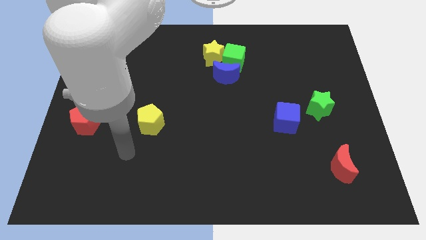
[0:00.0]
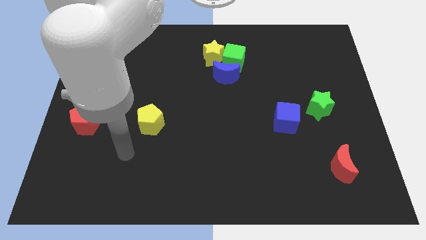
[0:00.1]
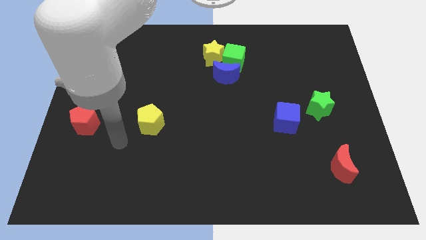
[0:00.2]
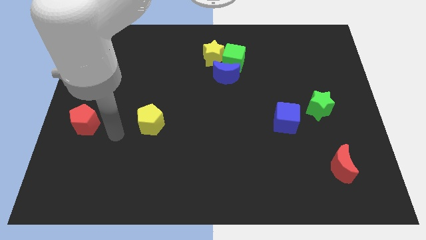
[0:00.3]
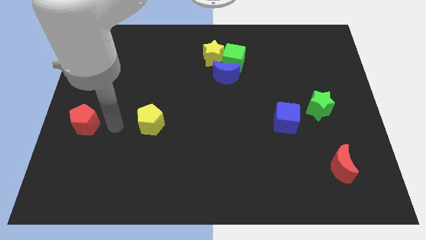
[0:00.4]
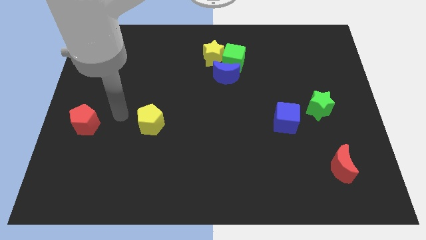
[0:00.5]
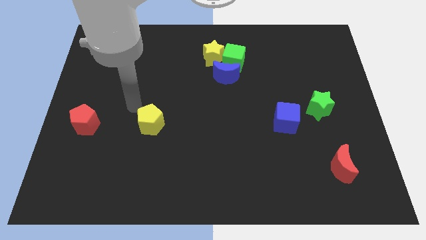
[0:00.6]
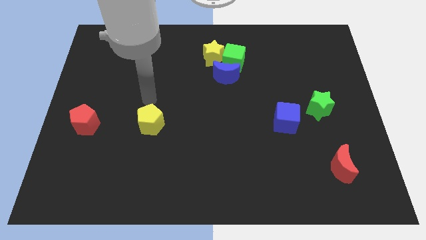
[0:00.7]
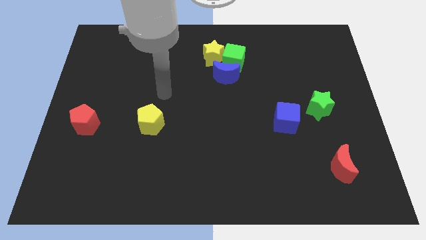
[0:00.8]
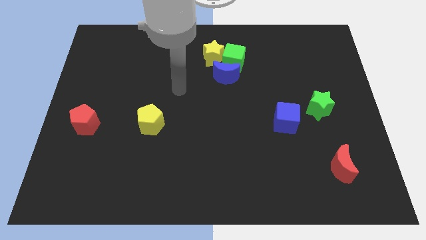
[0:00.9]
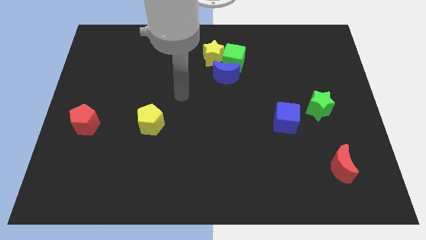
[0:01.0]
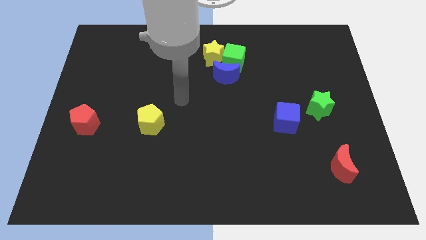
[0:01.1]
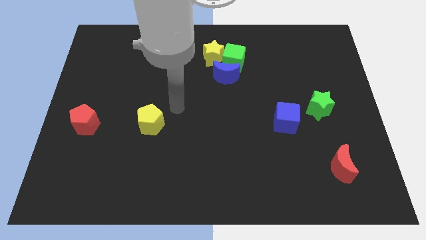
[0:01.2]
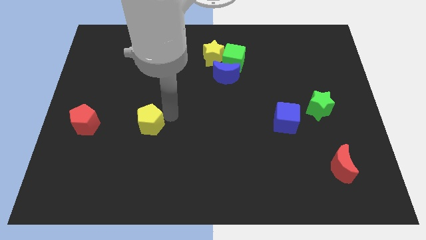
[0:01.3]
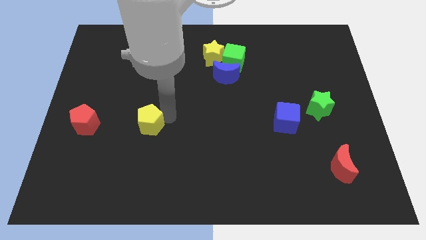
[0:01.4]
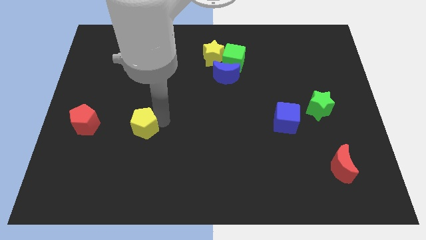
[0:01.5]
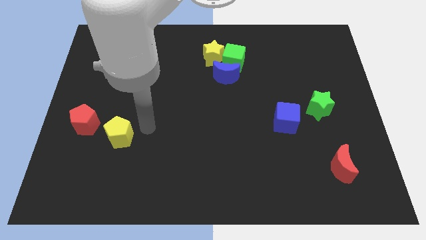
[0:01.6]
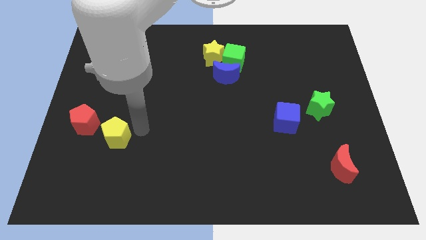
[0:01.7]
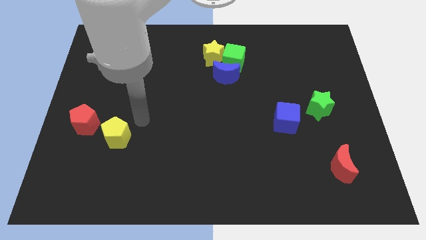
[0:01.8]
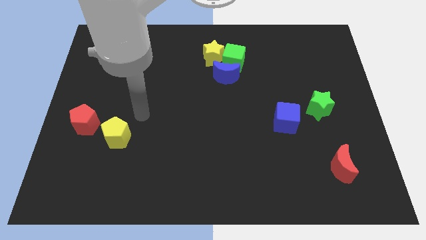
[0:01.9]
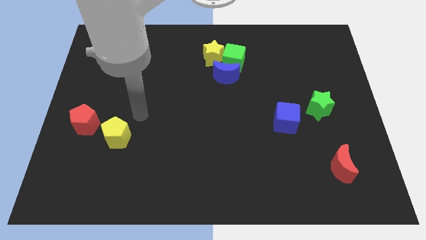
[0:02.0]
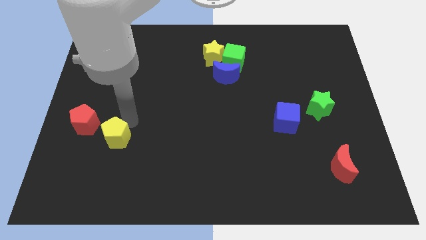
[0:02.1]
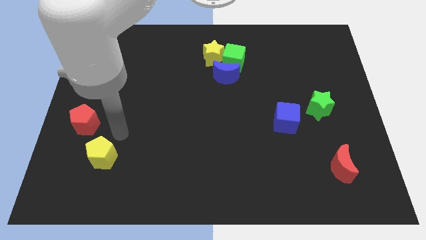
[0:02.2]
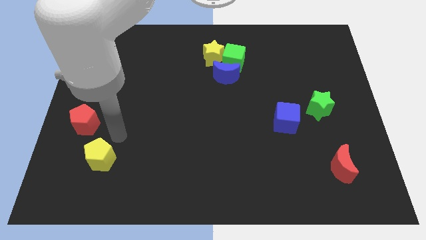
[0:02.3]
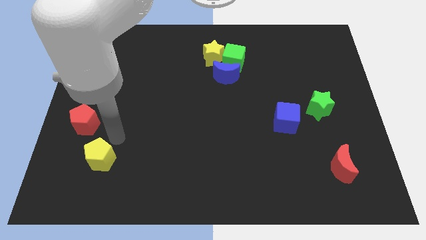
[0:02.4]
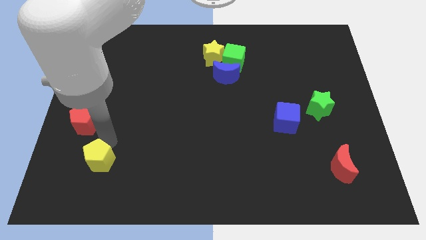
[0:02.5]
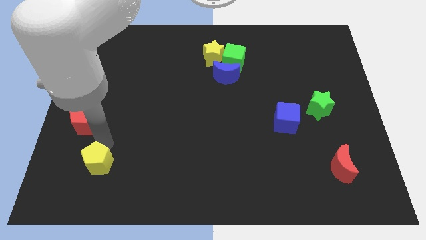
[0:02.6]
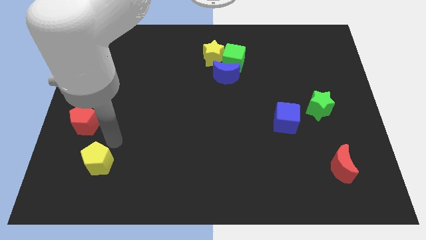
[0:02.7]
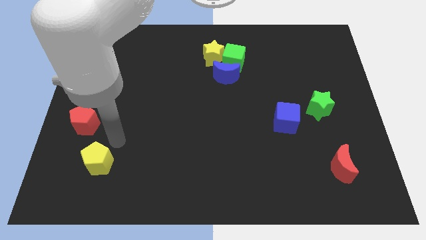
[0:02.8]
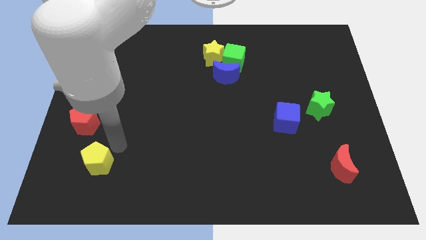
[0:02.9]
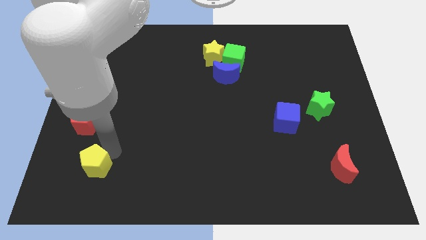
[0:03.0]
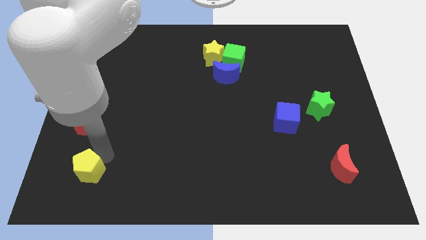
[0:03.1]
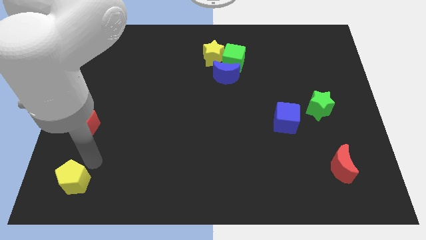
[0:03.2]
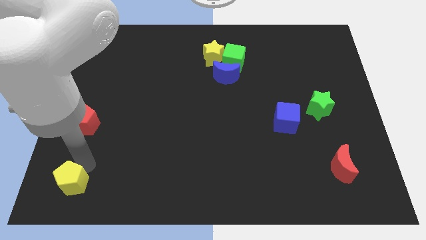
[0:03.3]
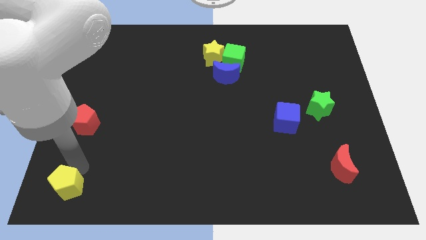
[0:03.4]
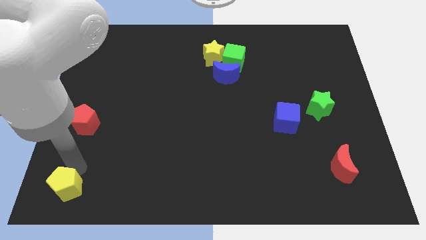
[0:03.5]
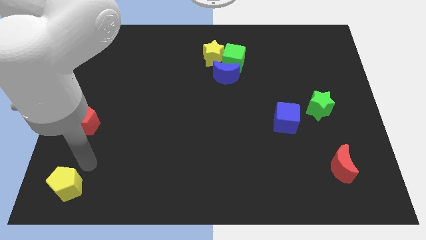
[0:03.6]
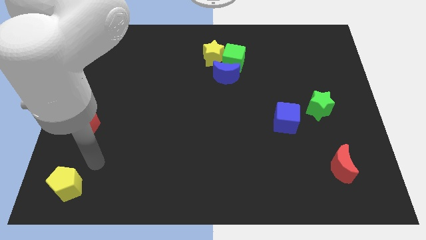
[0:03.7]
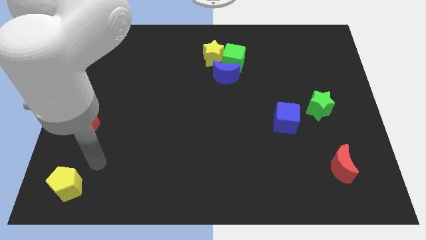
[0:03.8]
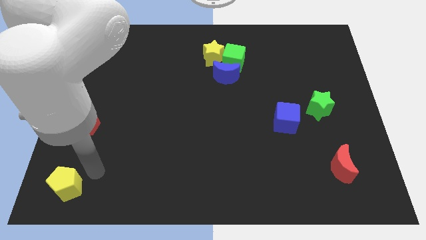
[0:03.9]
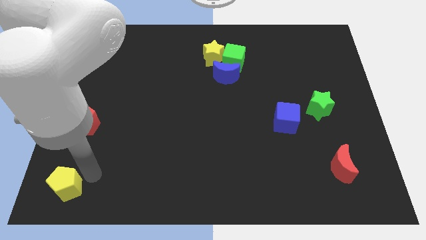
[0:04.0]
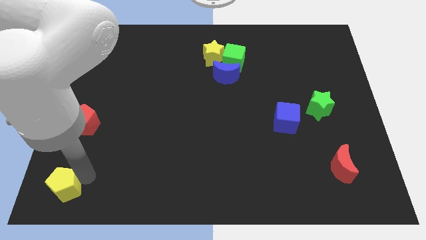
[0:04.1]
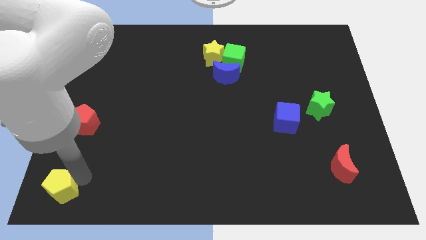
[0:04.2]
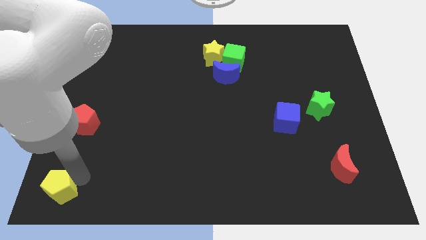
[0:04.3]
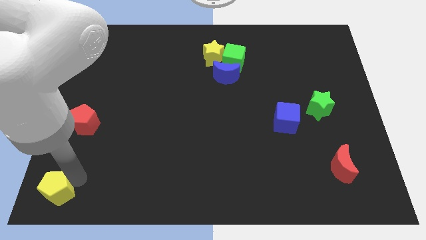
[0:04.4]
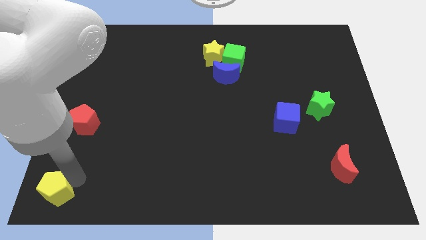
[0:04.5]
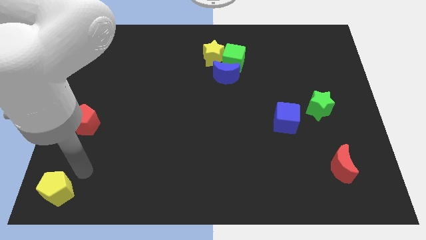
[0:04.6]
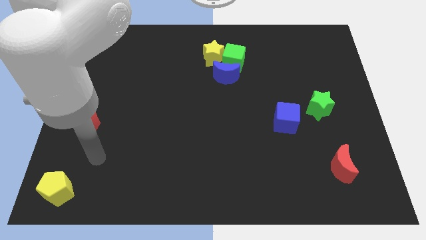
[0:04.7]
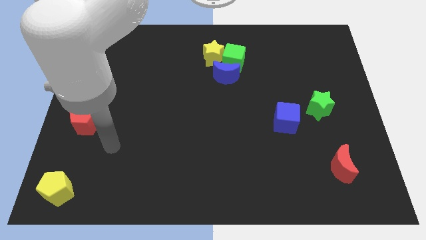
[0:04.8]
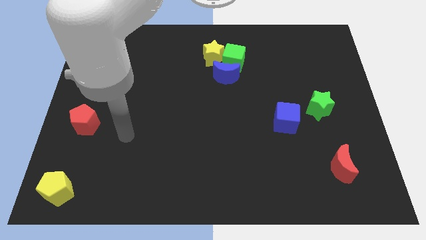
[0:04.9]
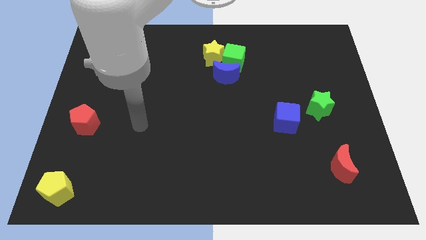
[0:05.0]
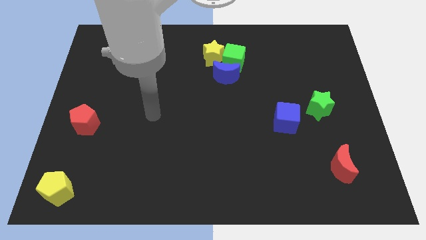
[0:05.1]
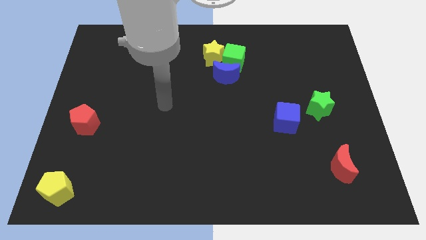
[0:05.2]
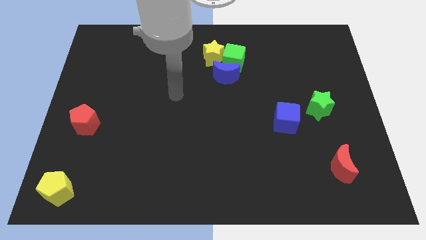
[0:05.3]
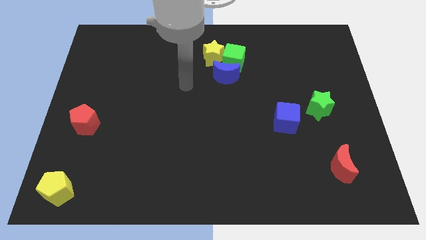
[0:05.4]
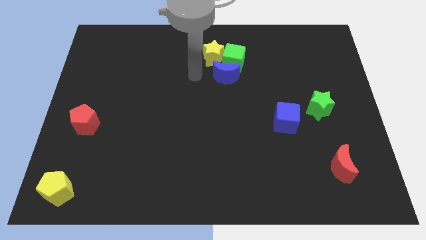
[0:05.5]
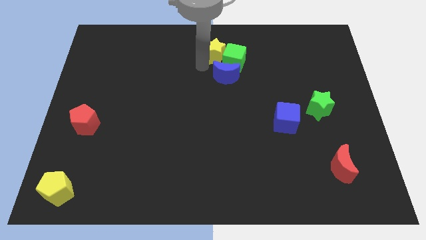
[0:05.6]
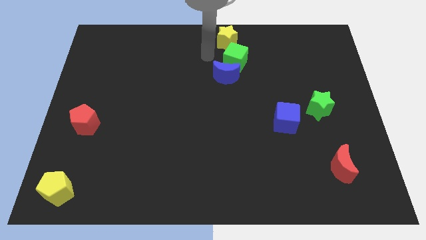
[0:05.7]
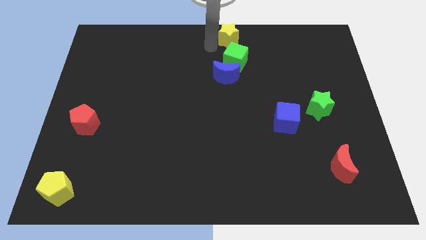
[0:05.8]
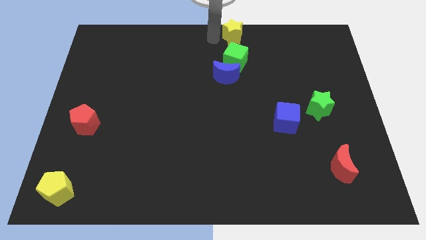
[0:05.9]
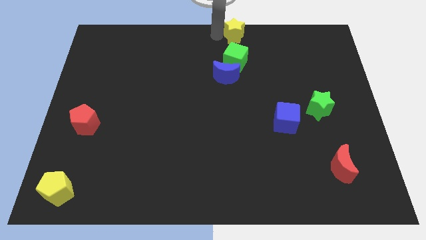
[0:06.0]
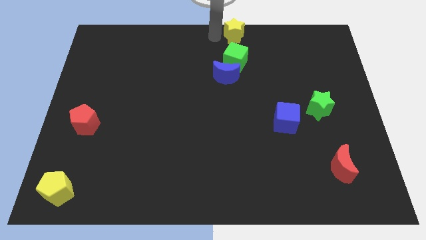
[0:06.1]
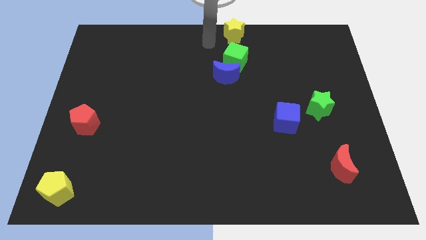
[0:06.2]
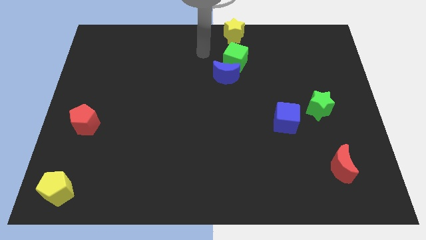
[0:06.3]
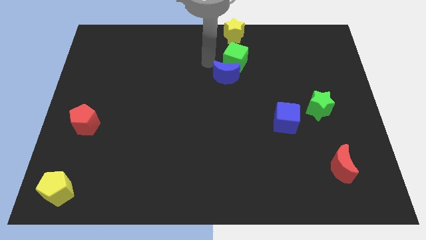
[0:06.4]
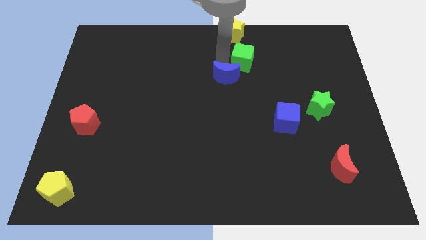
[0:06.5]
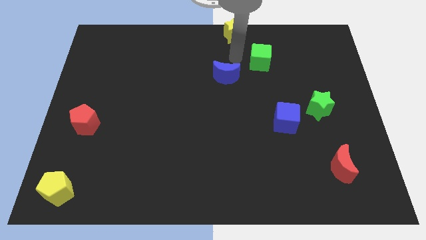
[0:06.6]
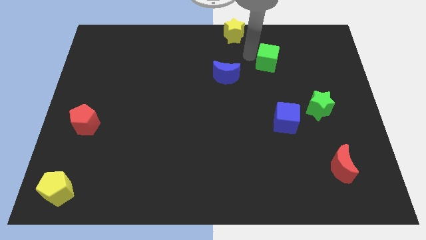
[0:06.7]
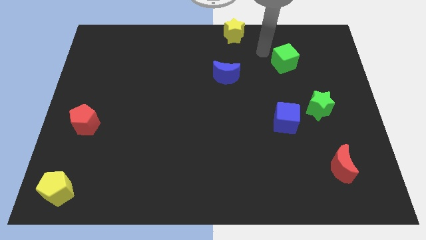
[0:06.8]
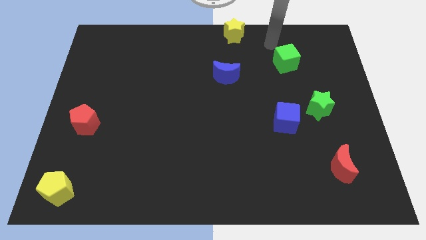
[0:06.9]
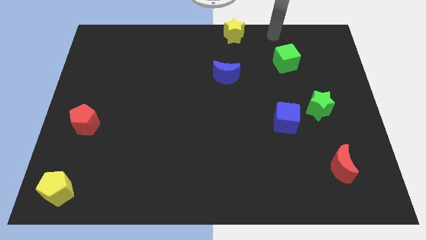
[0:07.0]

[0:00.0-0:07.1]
place the yellow pentagon to the bottom left of the board

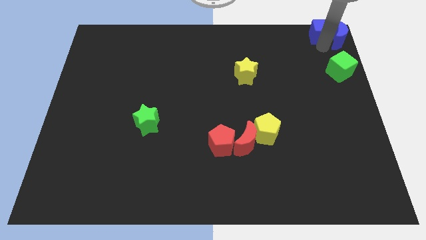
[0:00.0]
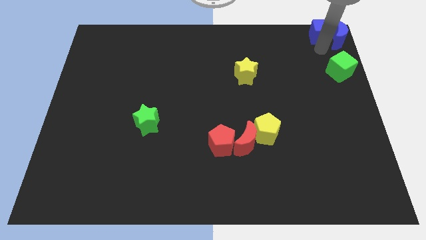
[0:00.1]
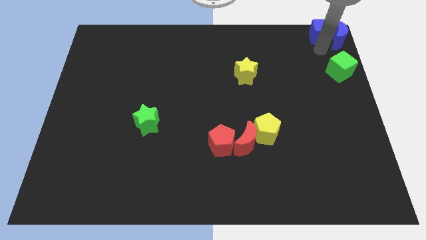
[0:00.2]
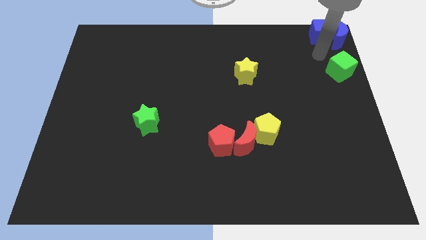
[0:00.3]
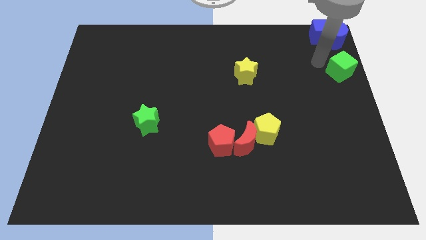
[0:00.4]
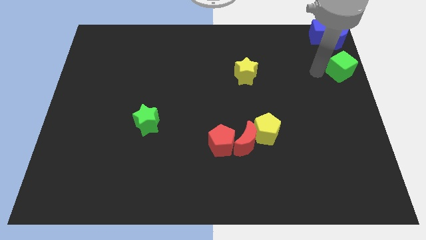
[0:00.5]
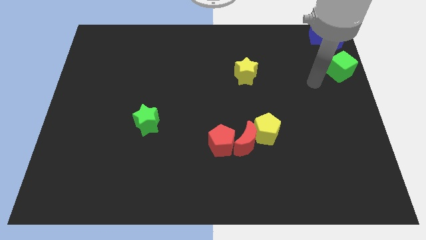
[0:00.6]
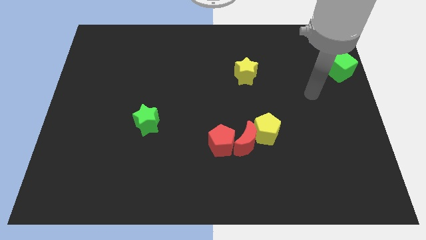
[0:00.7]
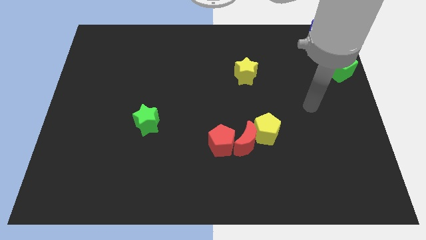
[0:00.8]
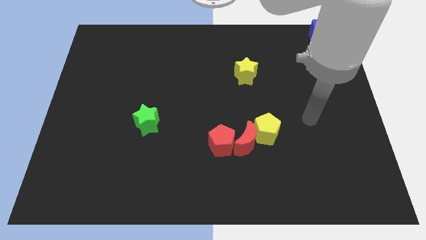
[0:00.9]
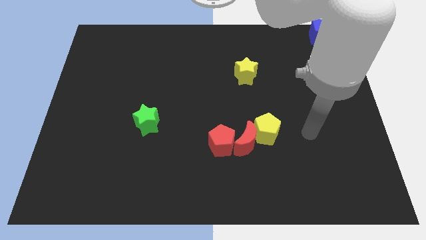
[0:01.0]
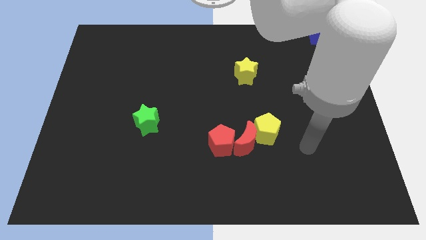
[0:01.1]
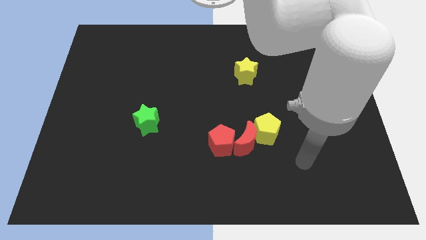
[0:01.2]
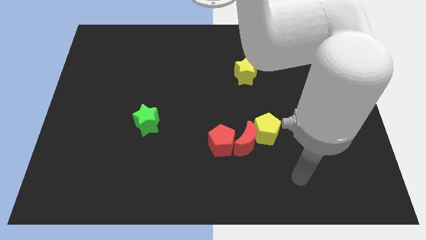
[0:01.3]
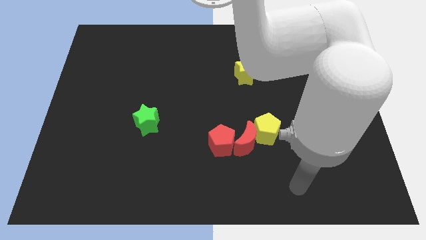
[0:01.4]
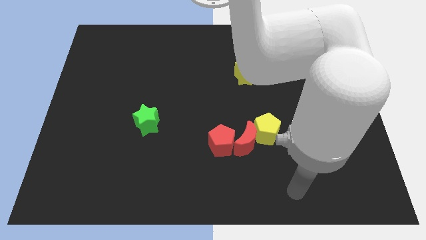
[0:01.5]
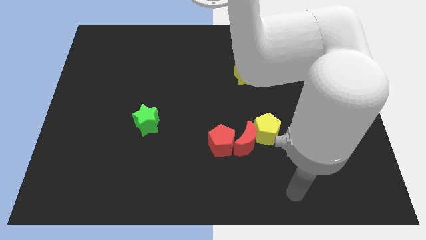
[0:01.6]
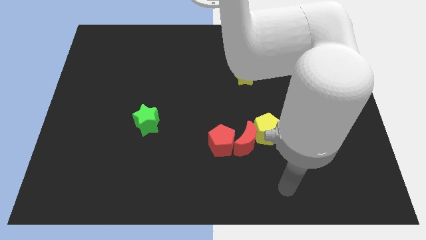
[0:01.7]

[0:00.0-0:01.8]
move your arm away from the blue cube
